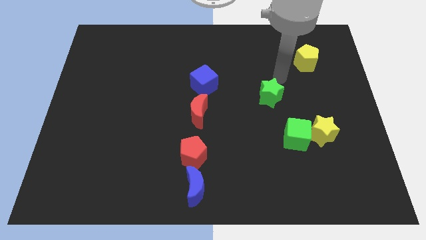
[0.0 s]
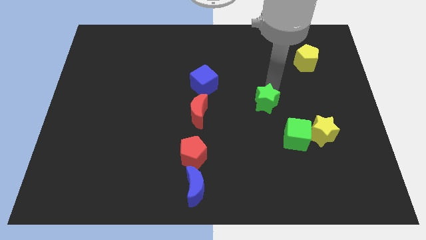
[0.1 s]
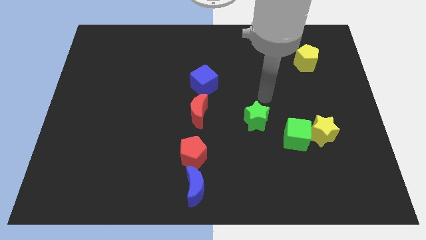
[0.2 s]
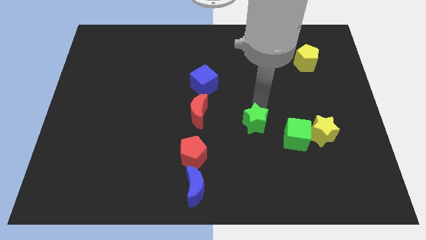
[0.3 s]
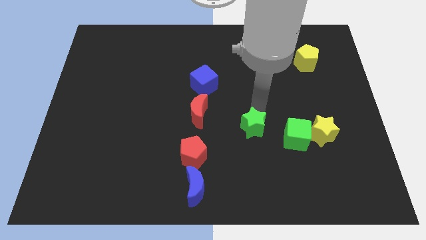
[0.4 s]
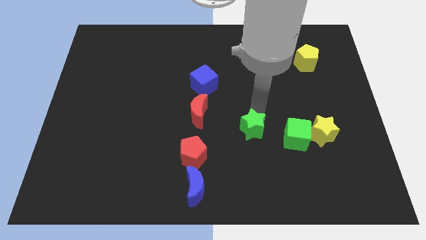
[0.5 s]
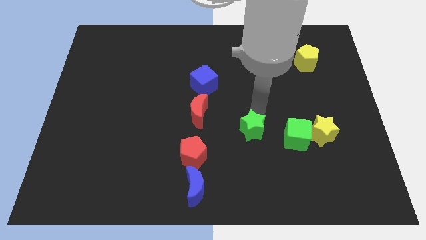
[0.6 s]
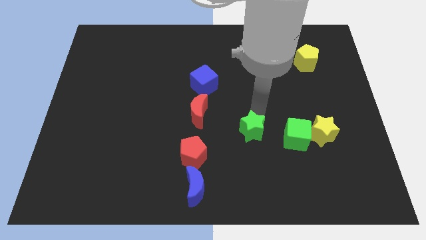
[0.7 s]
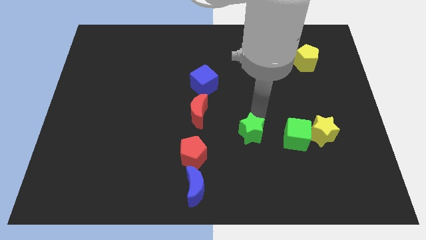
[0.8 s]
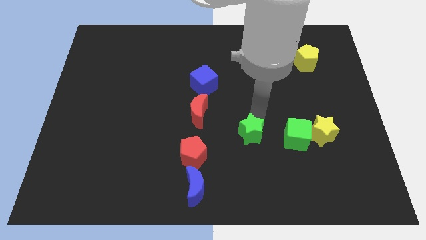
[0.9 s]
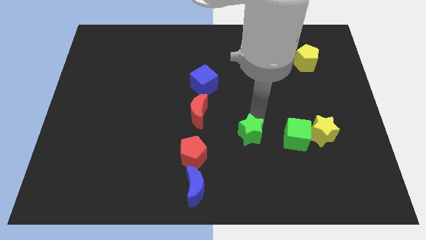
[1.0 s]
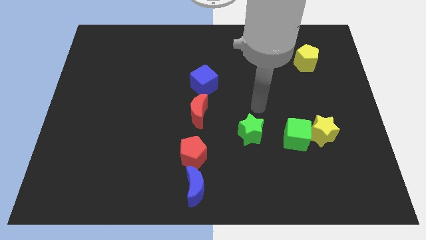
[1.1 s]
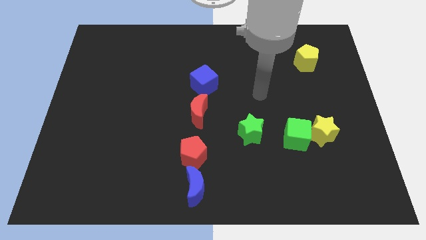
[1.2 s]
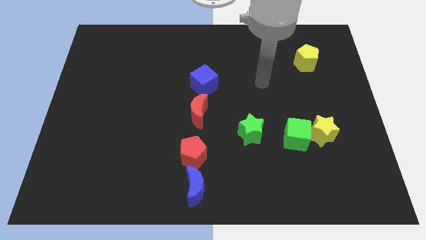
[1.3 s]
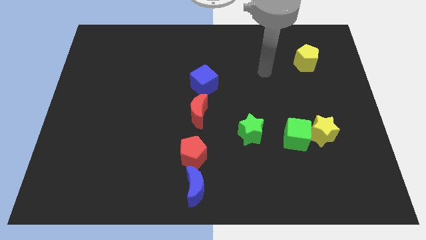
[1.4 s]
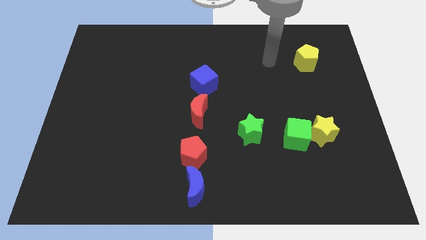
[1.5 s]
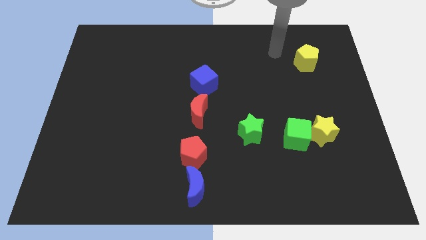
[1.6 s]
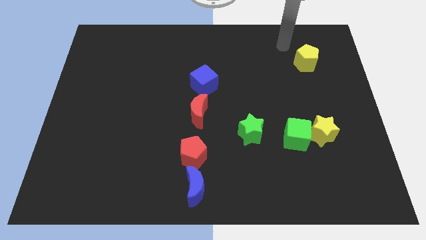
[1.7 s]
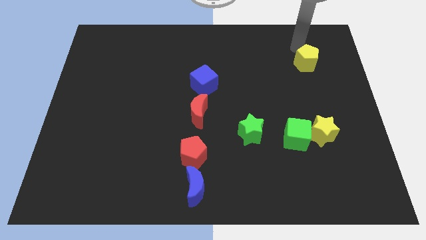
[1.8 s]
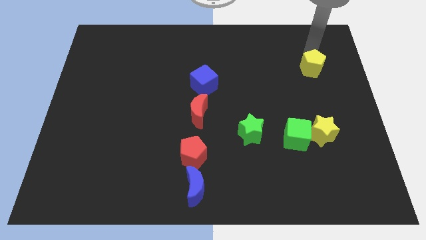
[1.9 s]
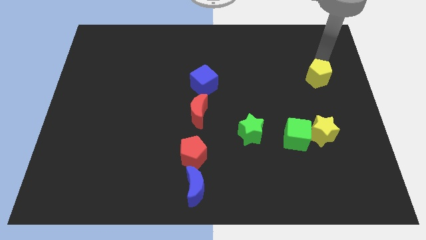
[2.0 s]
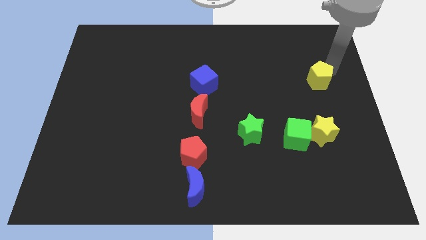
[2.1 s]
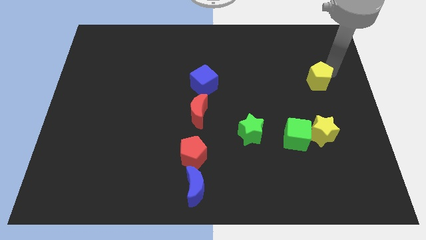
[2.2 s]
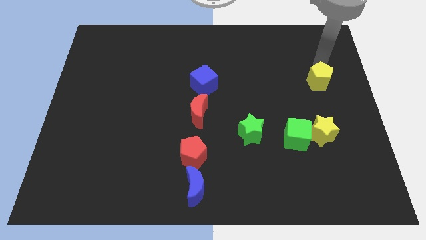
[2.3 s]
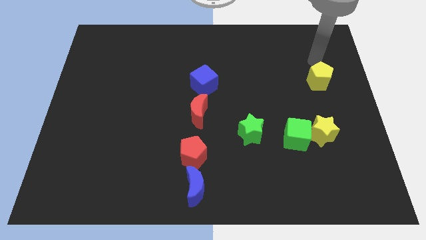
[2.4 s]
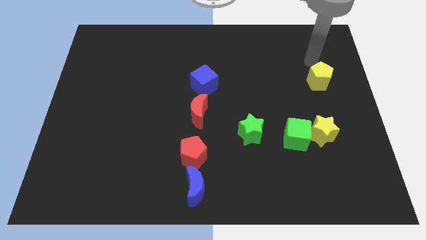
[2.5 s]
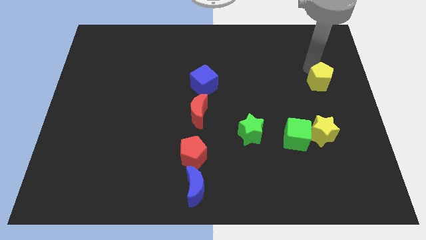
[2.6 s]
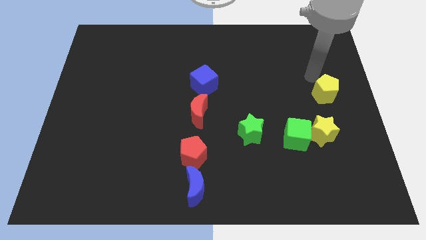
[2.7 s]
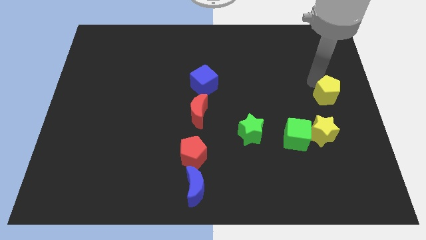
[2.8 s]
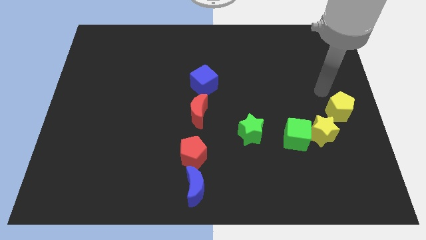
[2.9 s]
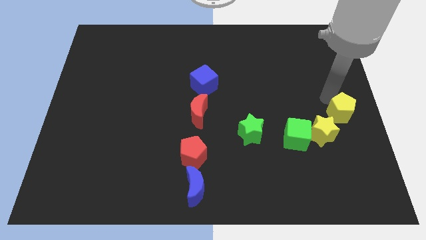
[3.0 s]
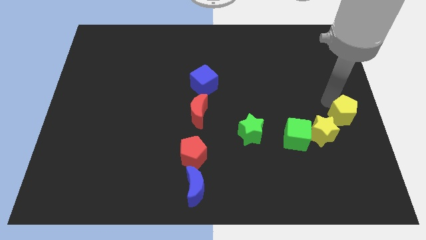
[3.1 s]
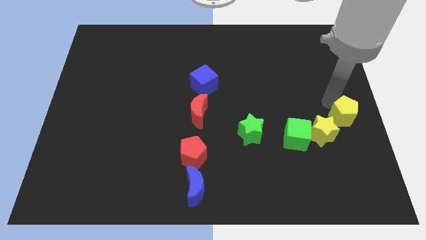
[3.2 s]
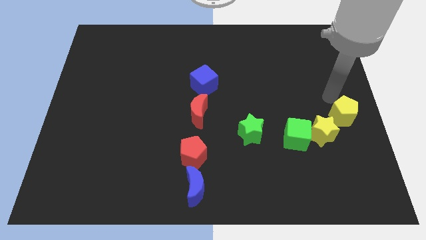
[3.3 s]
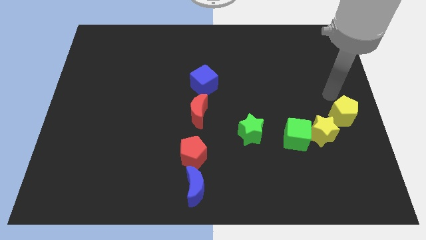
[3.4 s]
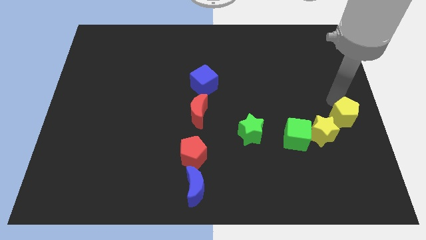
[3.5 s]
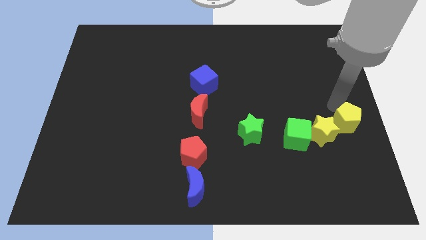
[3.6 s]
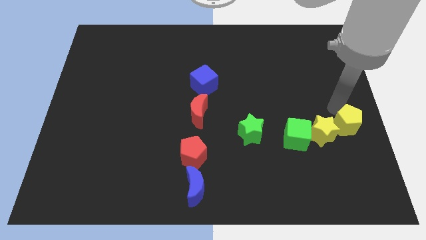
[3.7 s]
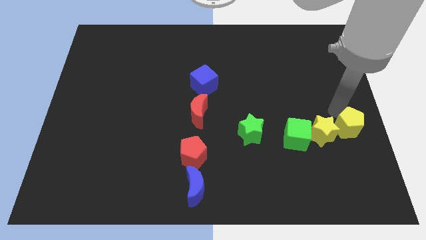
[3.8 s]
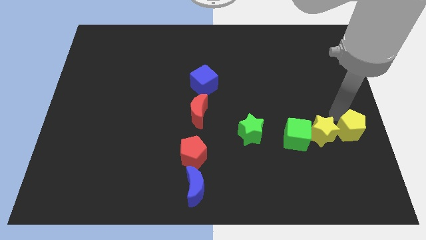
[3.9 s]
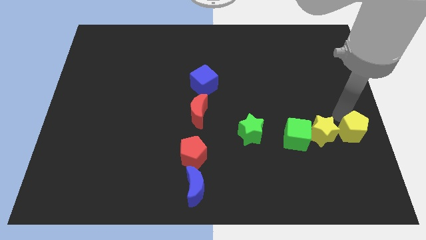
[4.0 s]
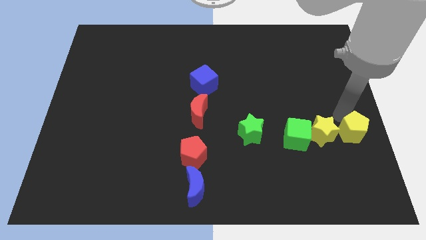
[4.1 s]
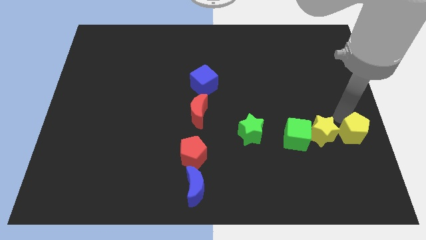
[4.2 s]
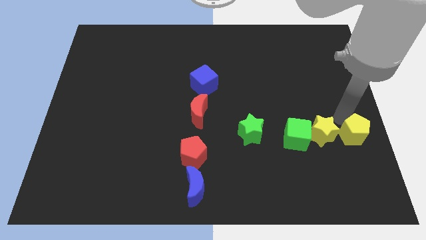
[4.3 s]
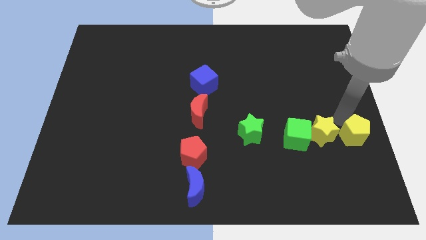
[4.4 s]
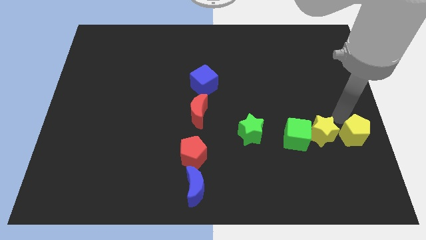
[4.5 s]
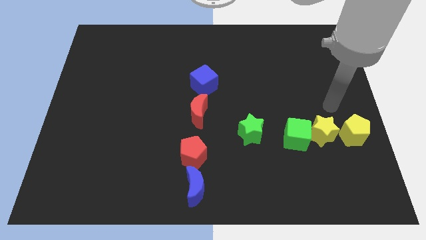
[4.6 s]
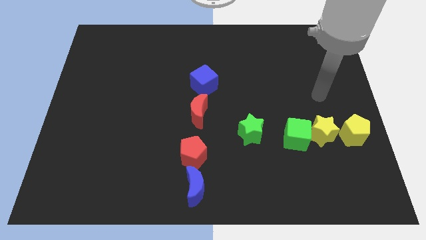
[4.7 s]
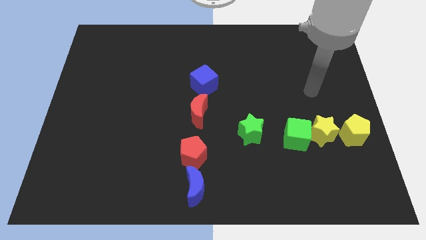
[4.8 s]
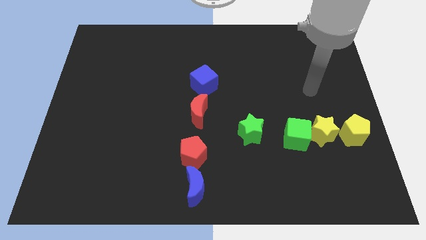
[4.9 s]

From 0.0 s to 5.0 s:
push the green star towards the left side of the green cube

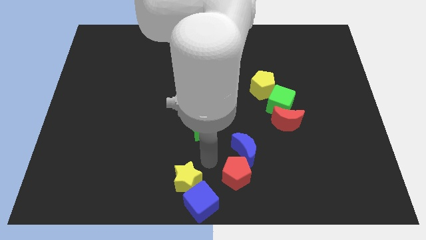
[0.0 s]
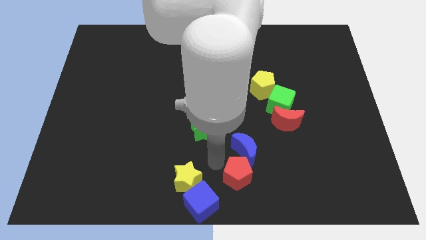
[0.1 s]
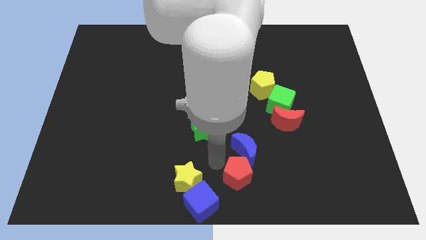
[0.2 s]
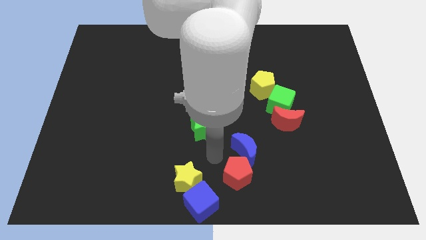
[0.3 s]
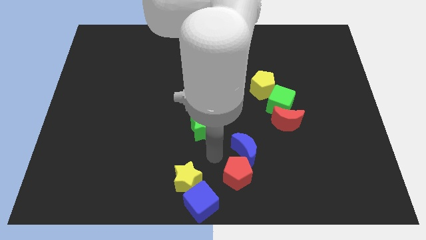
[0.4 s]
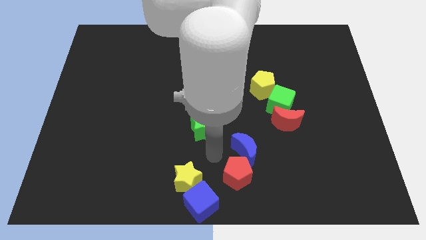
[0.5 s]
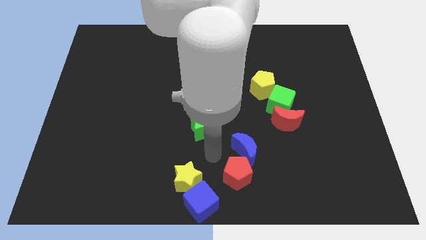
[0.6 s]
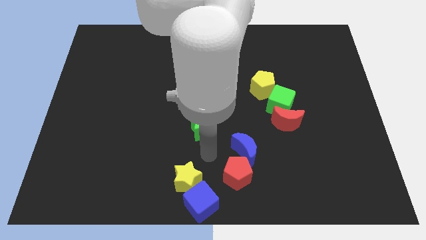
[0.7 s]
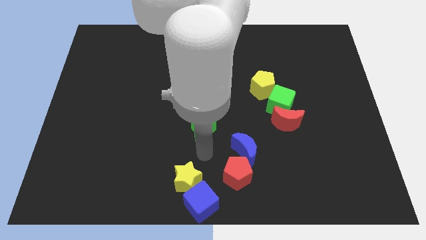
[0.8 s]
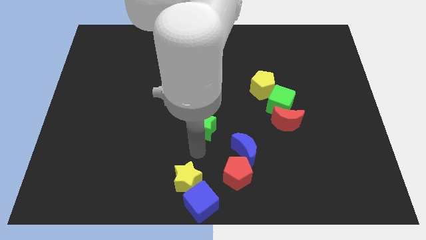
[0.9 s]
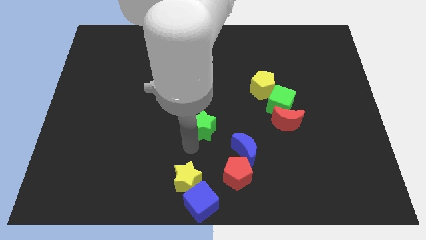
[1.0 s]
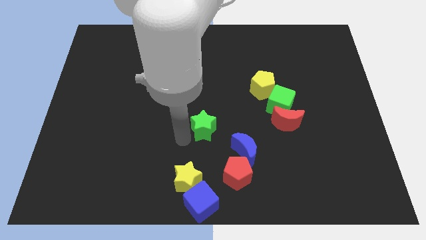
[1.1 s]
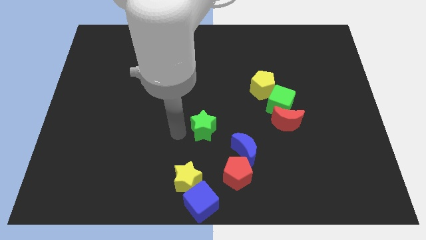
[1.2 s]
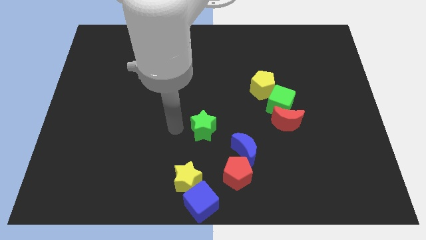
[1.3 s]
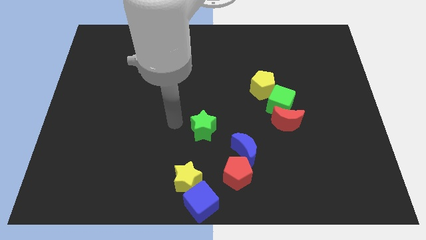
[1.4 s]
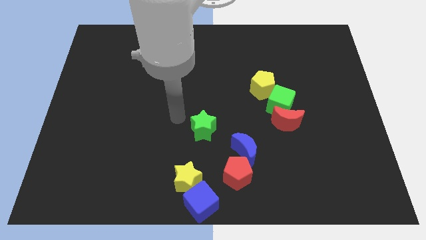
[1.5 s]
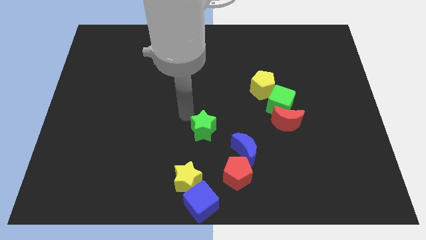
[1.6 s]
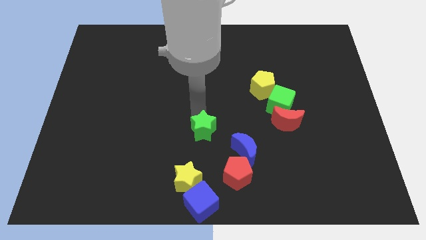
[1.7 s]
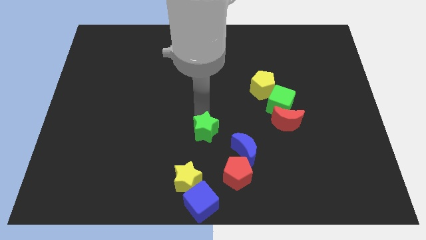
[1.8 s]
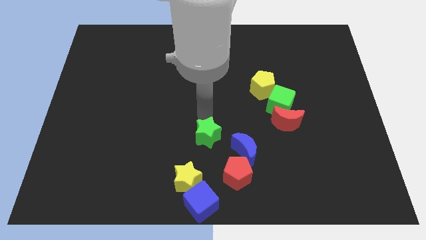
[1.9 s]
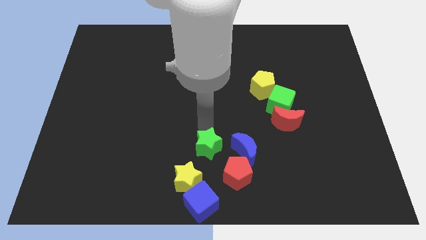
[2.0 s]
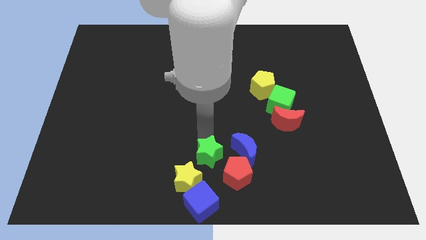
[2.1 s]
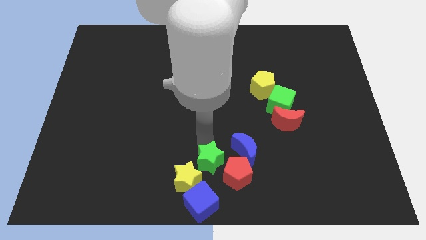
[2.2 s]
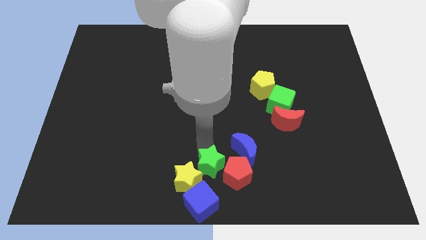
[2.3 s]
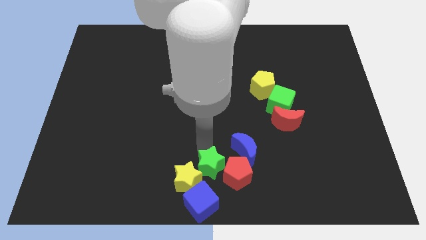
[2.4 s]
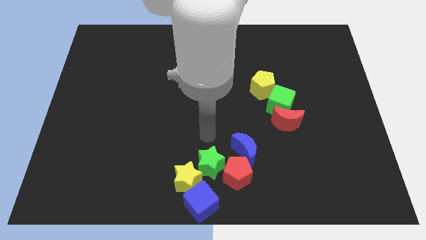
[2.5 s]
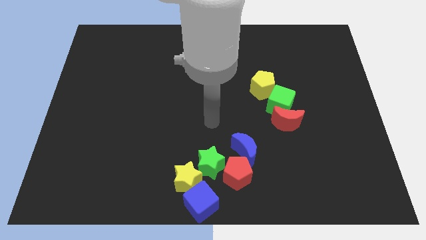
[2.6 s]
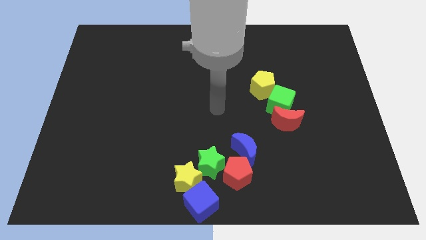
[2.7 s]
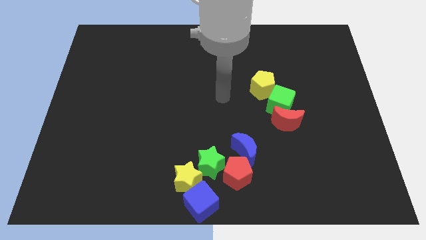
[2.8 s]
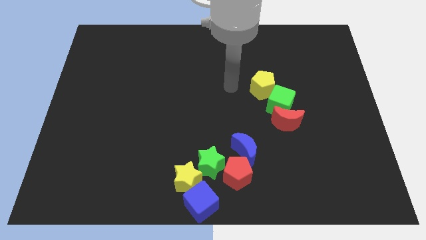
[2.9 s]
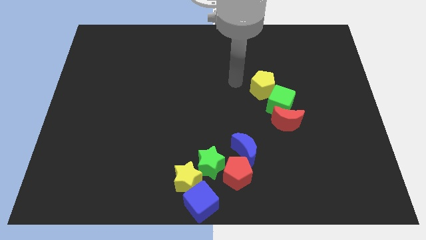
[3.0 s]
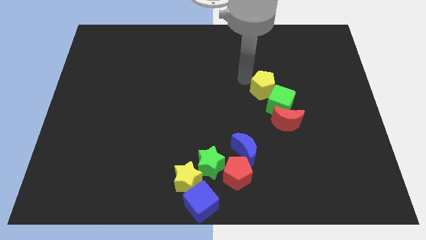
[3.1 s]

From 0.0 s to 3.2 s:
push the green star to the bottom side

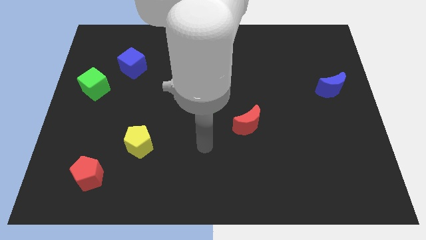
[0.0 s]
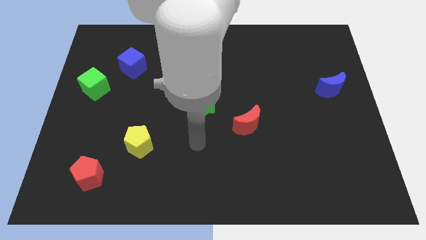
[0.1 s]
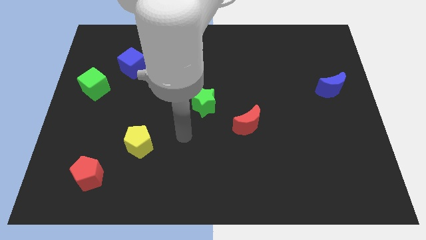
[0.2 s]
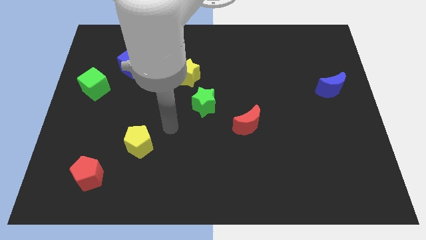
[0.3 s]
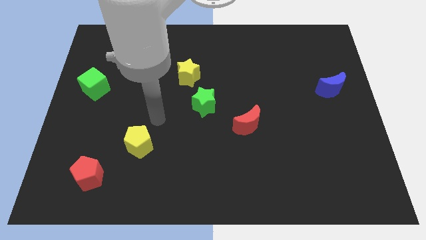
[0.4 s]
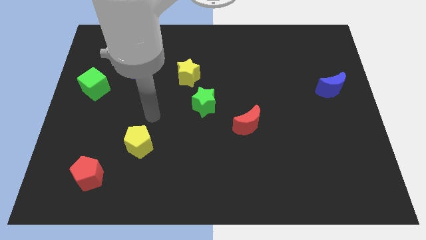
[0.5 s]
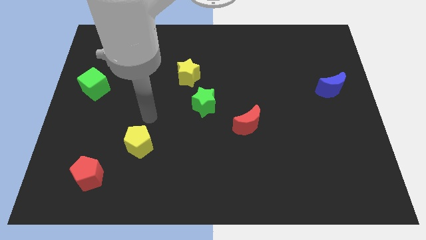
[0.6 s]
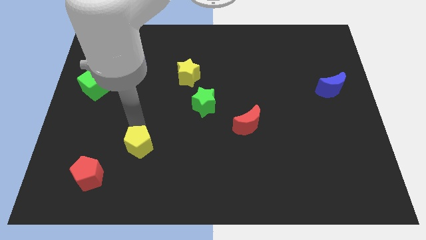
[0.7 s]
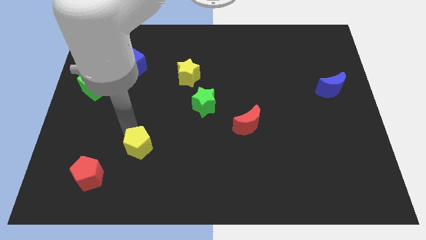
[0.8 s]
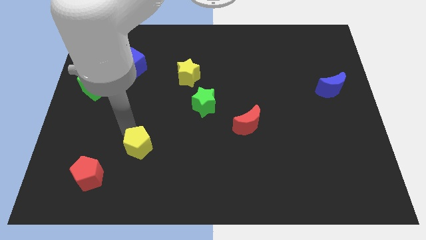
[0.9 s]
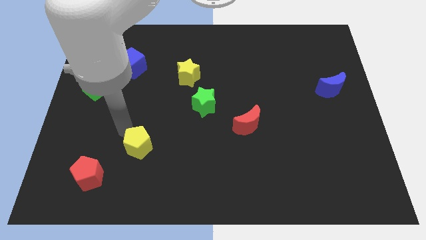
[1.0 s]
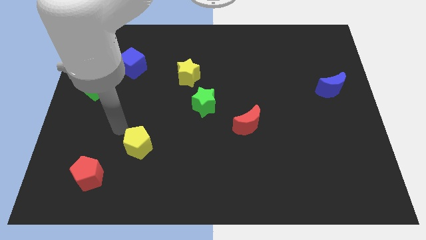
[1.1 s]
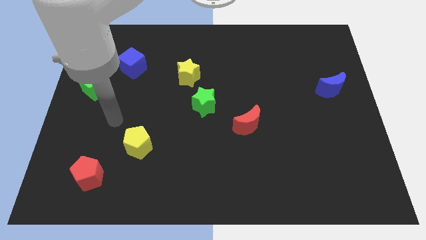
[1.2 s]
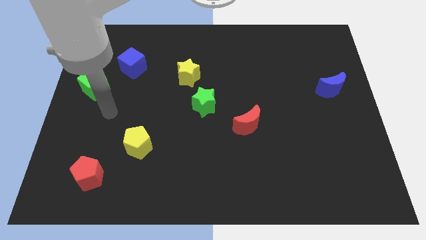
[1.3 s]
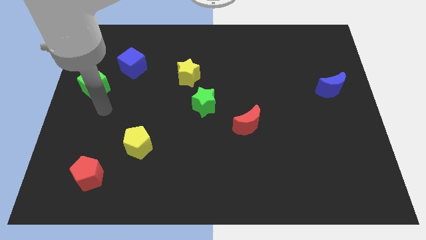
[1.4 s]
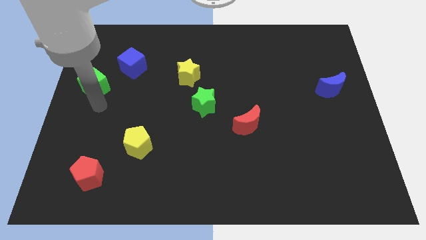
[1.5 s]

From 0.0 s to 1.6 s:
point your arm at the bottom of the green cube
